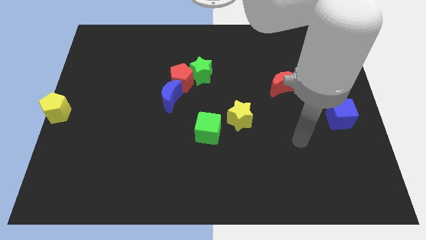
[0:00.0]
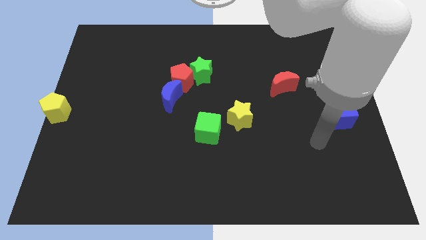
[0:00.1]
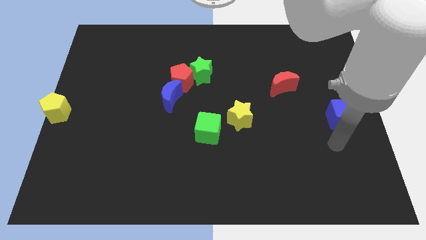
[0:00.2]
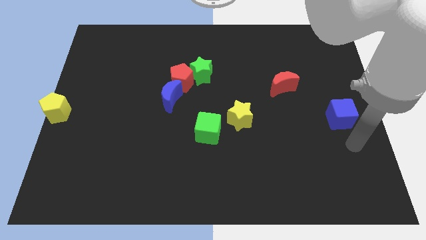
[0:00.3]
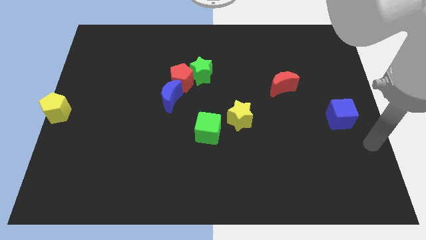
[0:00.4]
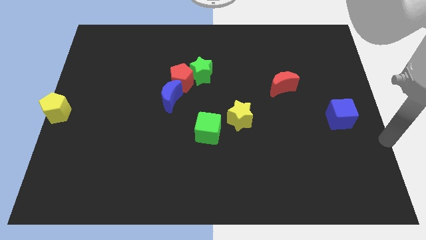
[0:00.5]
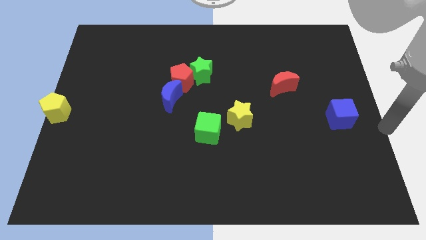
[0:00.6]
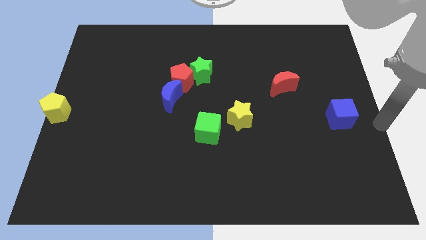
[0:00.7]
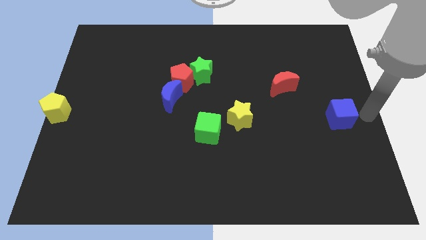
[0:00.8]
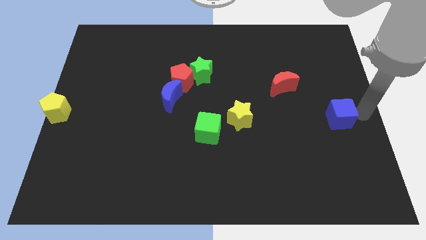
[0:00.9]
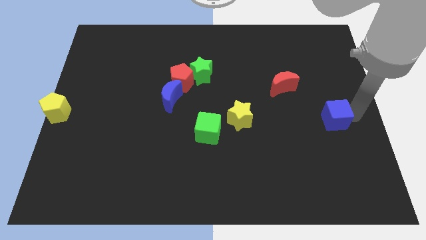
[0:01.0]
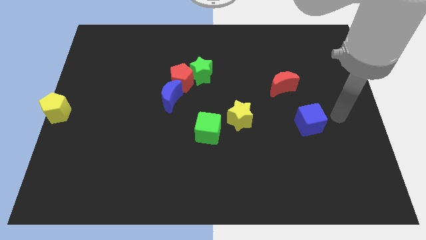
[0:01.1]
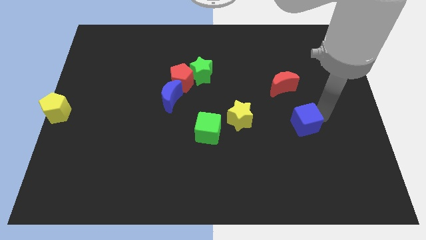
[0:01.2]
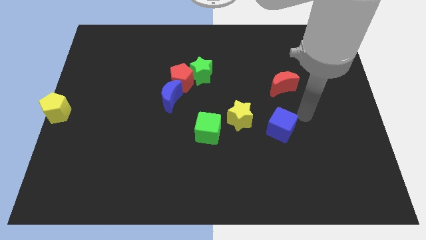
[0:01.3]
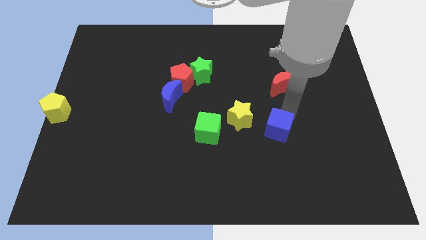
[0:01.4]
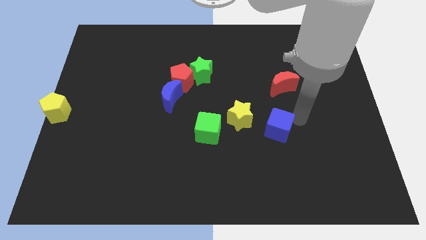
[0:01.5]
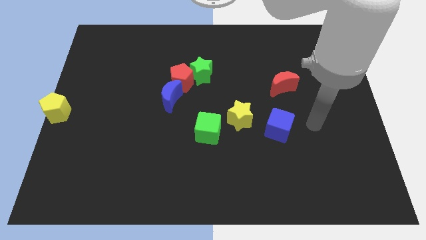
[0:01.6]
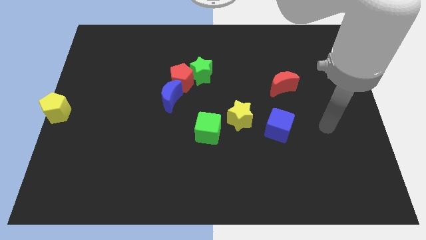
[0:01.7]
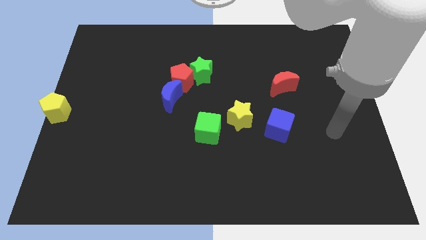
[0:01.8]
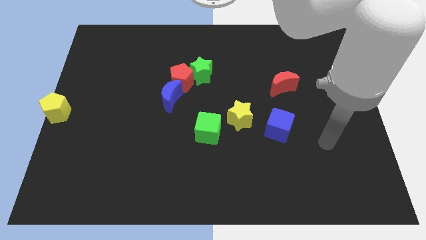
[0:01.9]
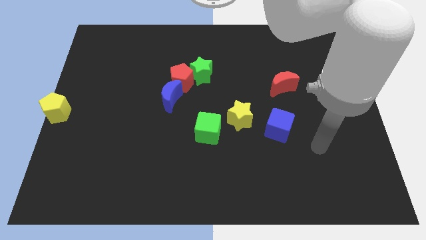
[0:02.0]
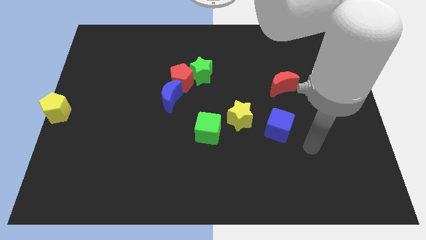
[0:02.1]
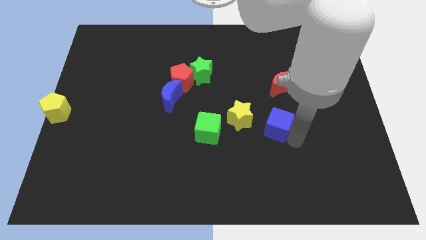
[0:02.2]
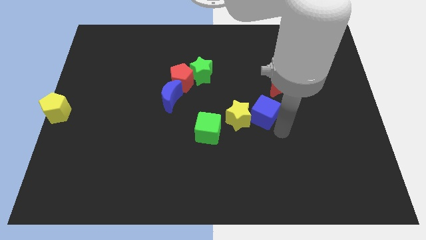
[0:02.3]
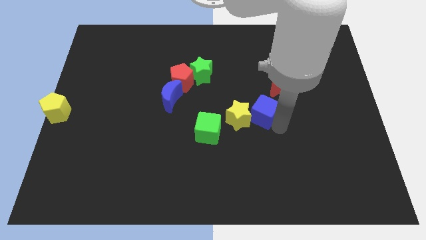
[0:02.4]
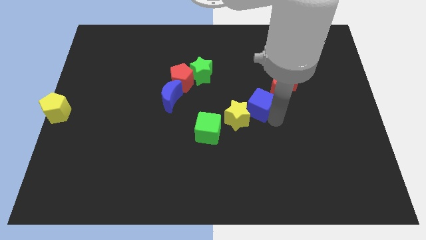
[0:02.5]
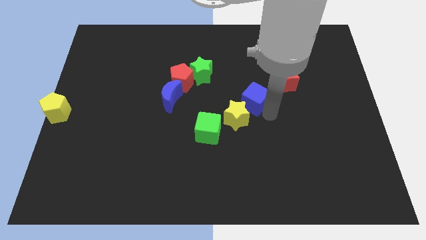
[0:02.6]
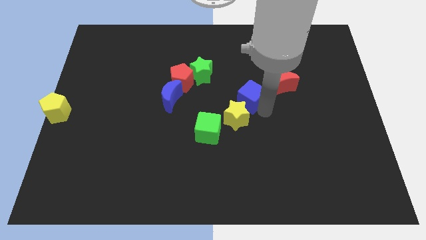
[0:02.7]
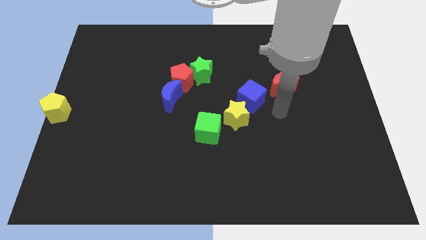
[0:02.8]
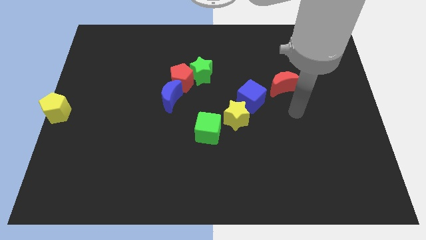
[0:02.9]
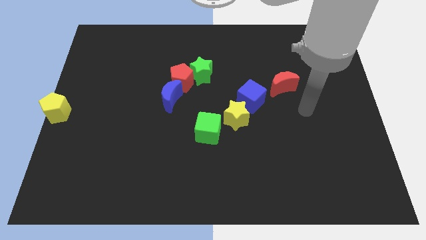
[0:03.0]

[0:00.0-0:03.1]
move the blue cube in between the yellow star and red moon

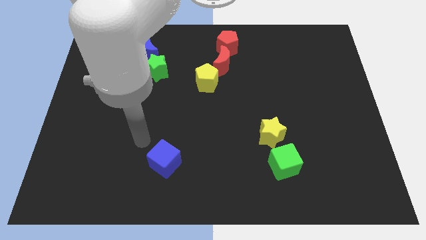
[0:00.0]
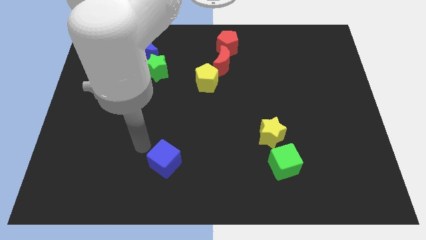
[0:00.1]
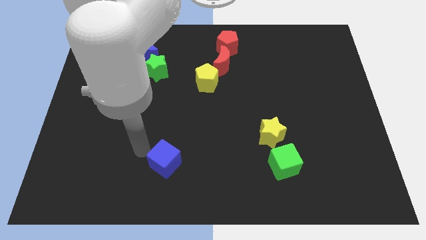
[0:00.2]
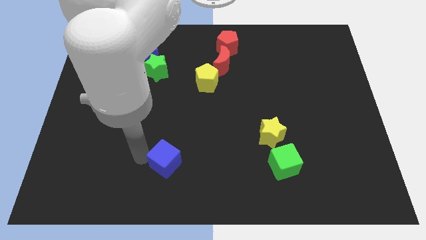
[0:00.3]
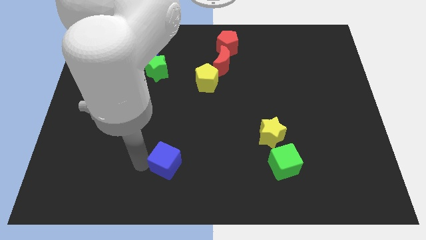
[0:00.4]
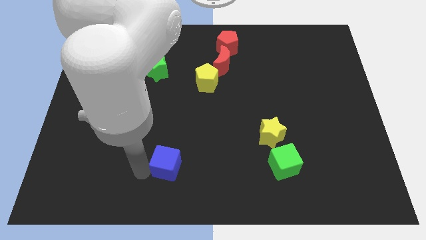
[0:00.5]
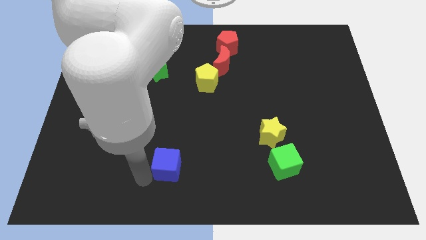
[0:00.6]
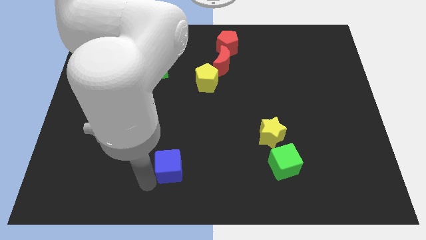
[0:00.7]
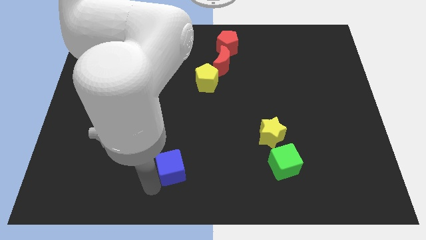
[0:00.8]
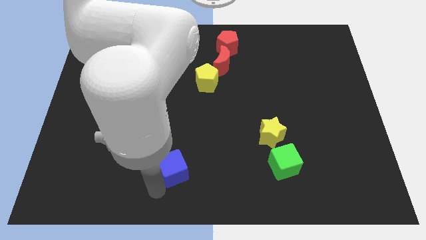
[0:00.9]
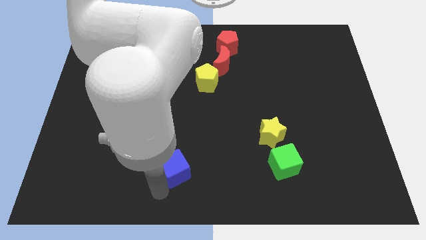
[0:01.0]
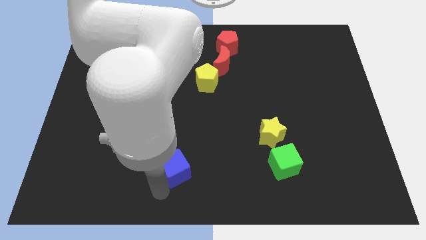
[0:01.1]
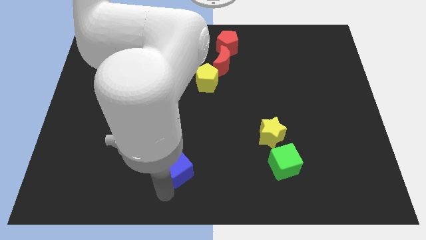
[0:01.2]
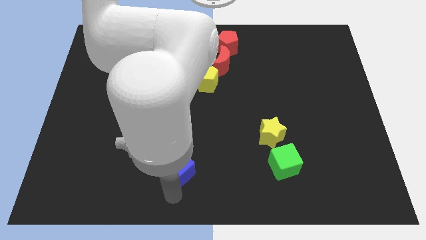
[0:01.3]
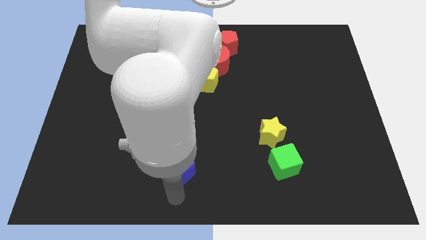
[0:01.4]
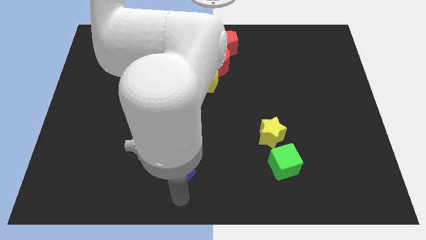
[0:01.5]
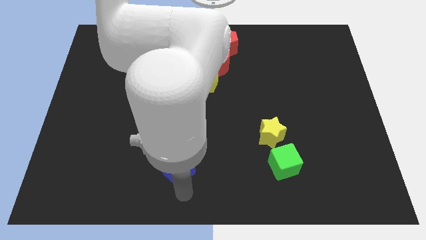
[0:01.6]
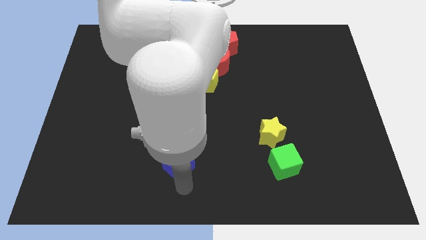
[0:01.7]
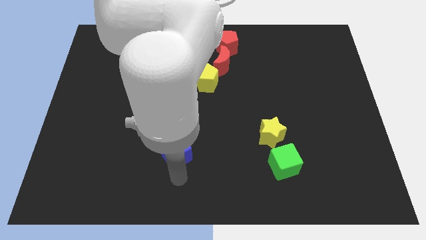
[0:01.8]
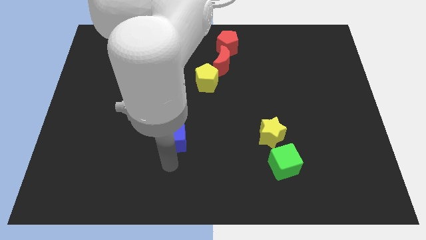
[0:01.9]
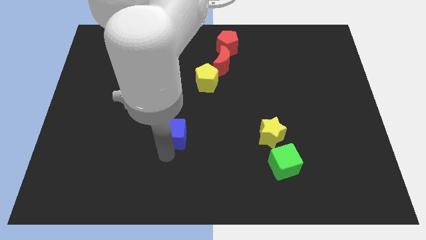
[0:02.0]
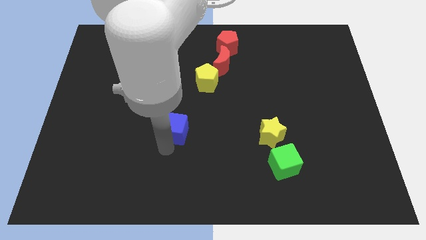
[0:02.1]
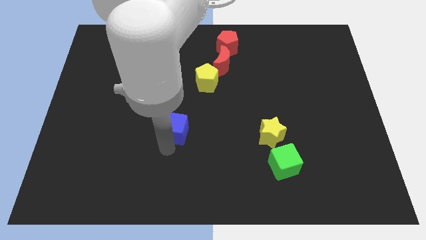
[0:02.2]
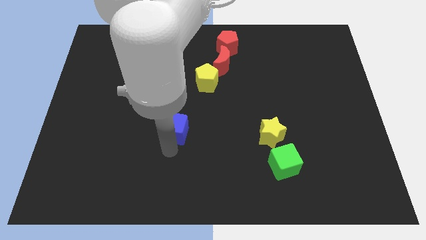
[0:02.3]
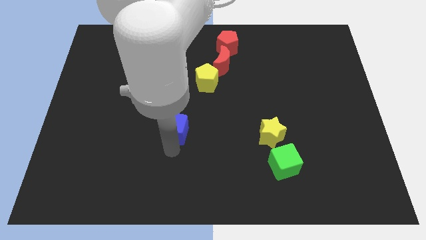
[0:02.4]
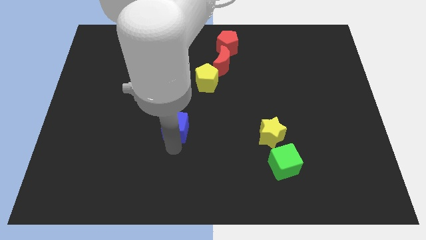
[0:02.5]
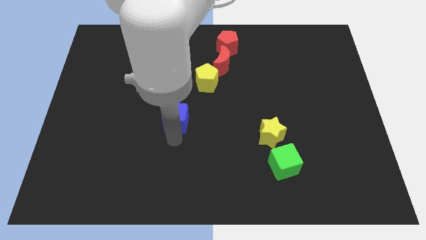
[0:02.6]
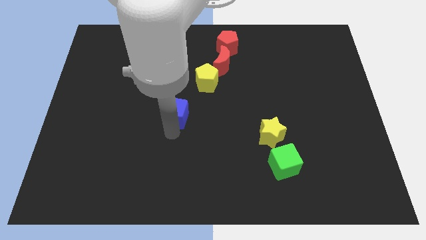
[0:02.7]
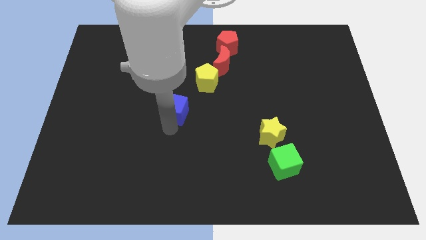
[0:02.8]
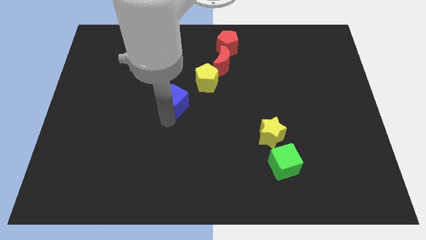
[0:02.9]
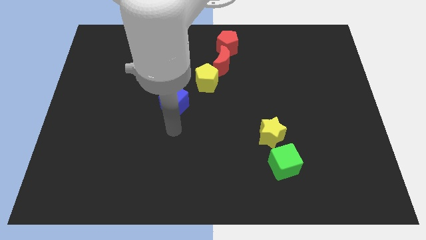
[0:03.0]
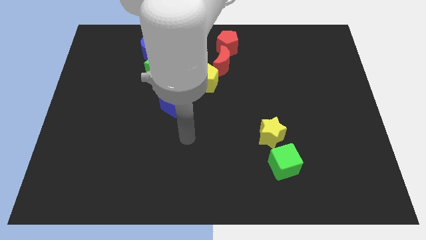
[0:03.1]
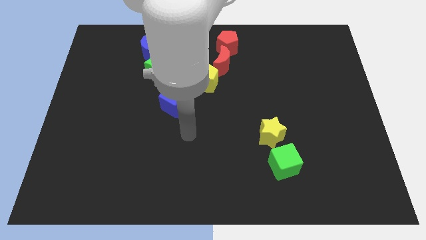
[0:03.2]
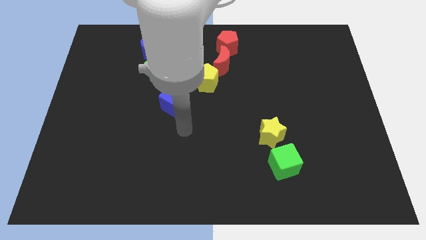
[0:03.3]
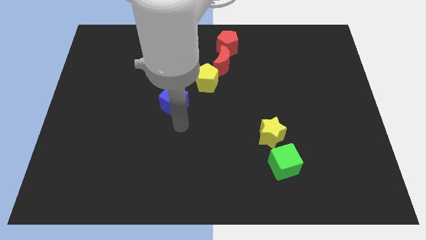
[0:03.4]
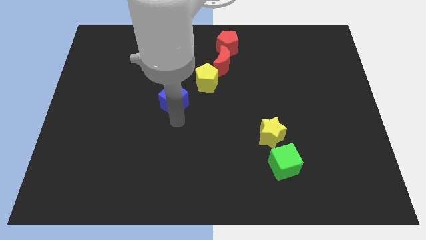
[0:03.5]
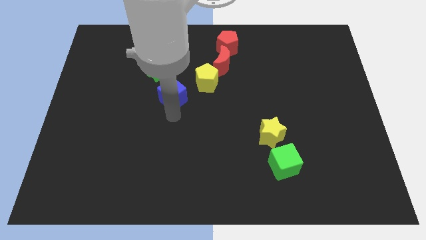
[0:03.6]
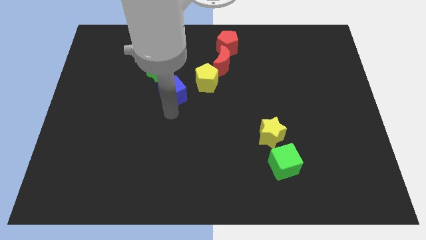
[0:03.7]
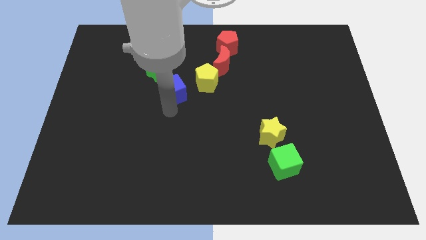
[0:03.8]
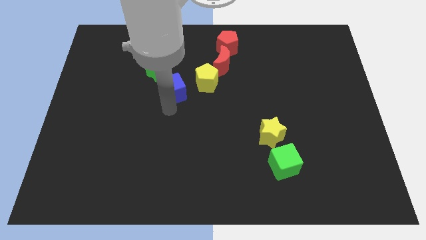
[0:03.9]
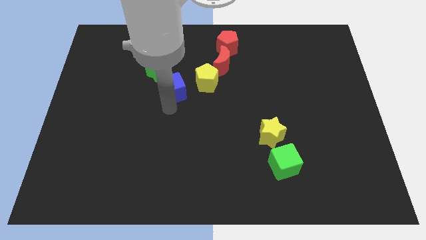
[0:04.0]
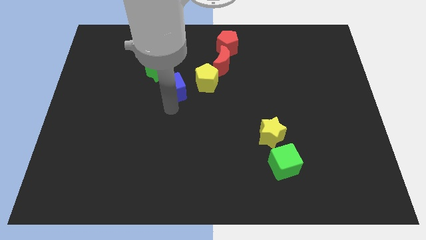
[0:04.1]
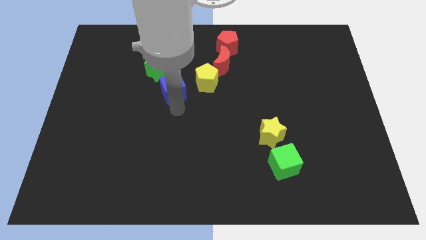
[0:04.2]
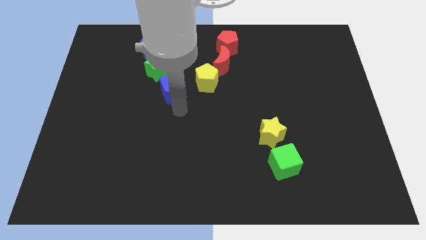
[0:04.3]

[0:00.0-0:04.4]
move the blue cube to the bottom left side of the yellow pentagon

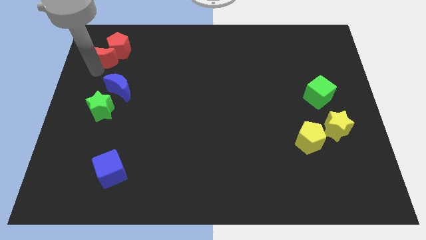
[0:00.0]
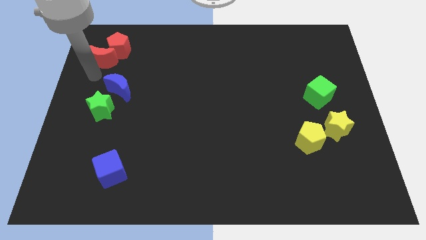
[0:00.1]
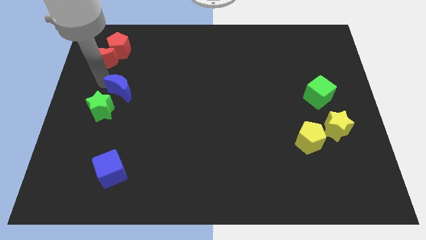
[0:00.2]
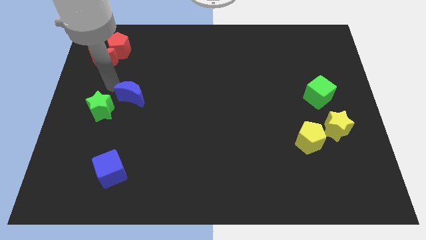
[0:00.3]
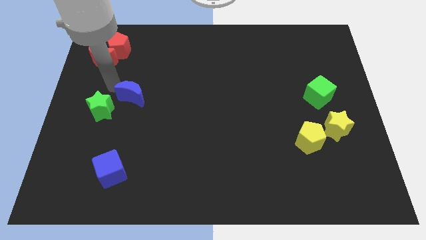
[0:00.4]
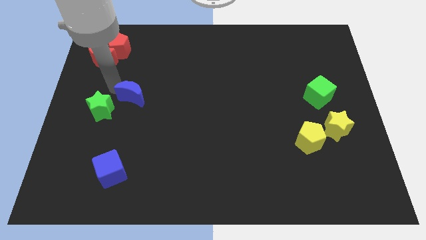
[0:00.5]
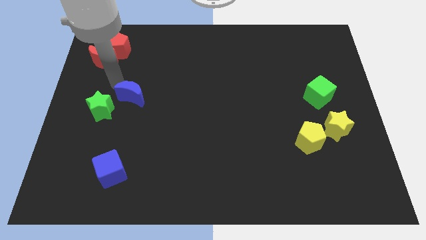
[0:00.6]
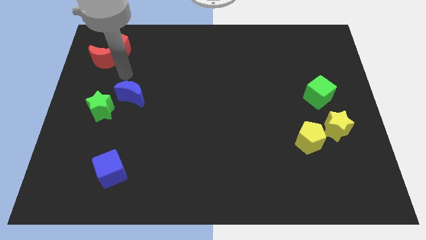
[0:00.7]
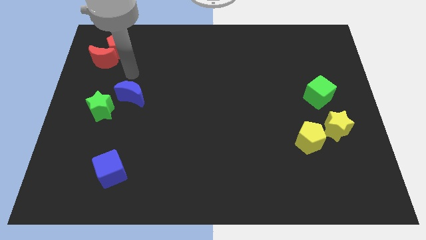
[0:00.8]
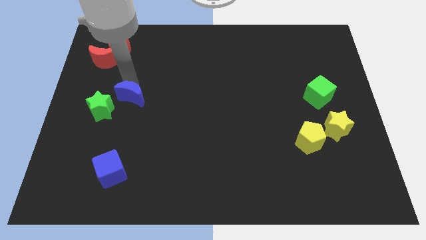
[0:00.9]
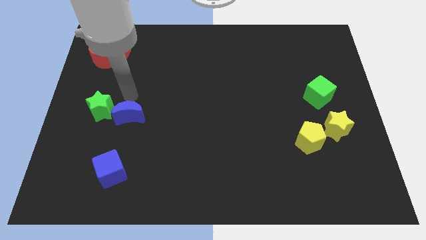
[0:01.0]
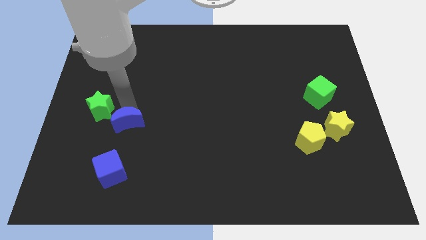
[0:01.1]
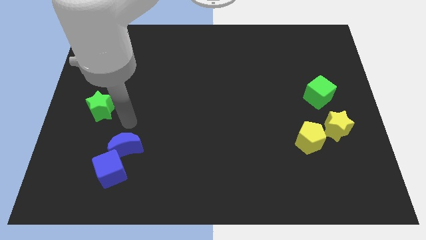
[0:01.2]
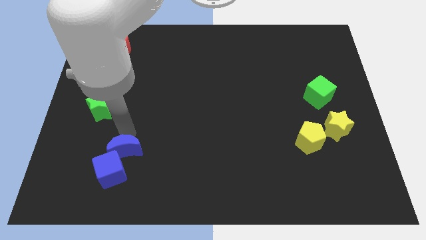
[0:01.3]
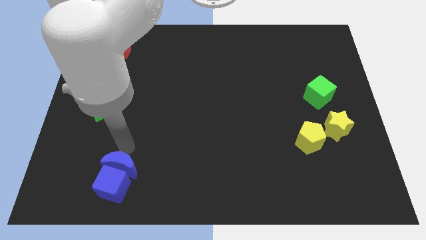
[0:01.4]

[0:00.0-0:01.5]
move the blue crescent into blue cube
